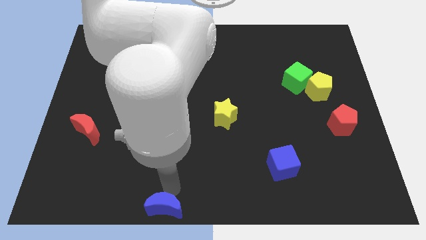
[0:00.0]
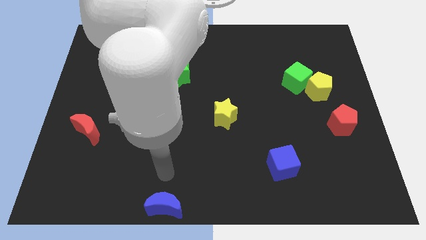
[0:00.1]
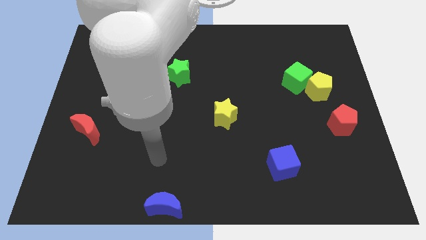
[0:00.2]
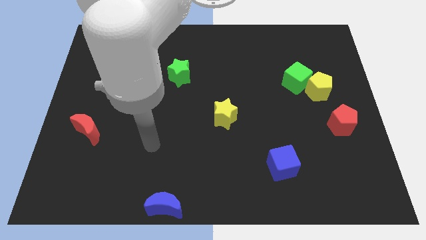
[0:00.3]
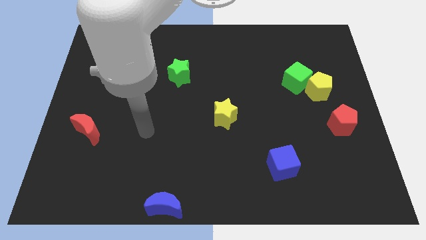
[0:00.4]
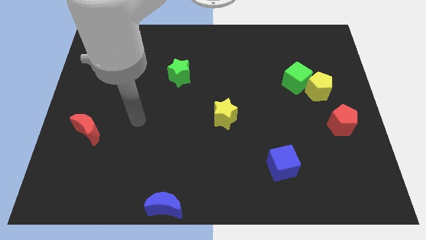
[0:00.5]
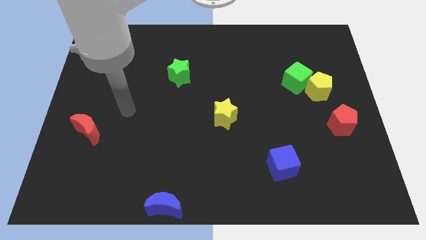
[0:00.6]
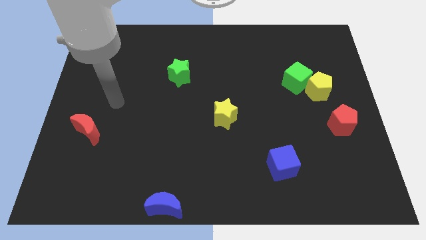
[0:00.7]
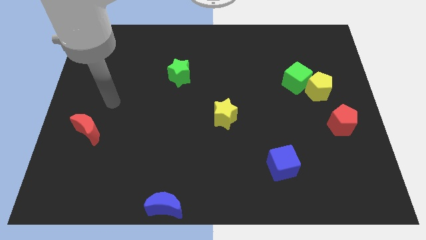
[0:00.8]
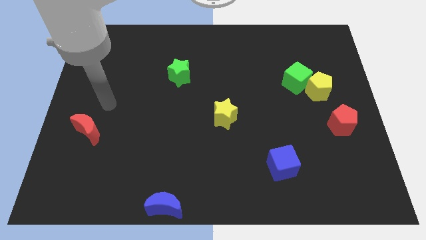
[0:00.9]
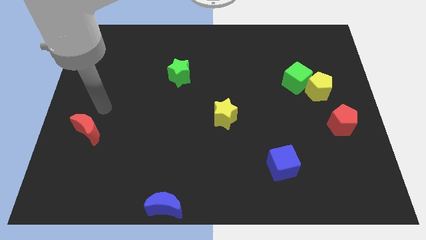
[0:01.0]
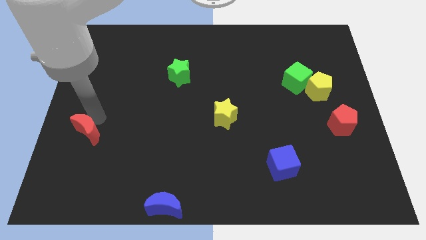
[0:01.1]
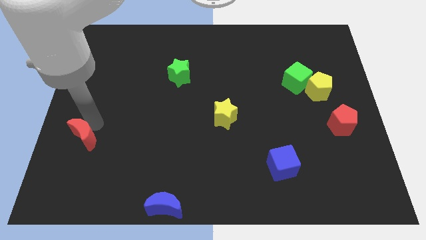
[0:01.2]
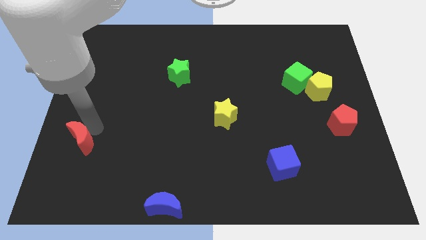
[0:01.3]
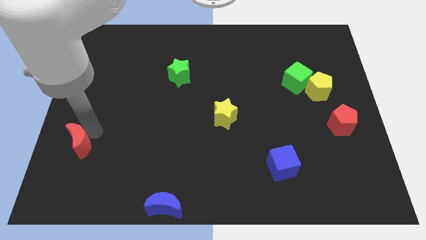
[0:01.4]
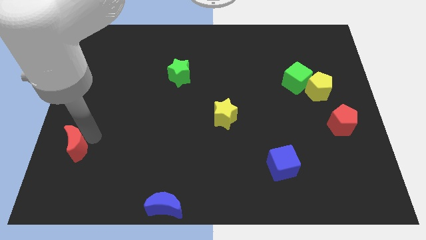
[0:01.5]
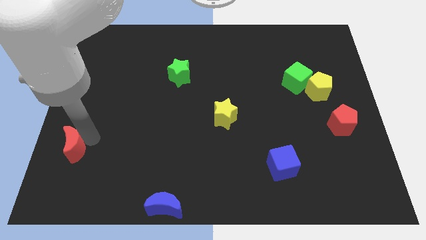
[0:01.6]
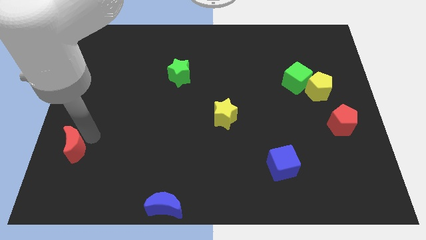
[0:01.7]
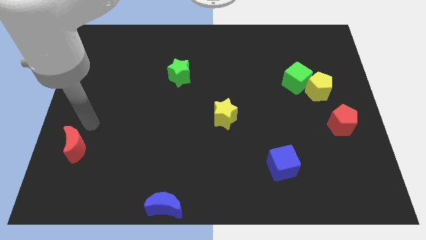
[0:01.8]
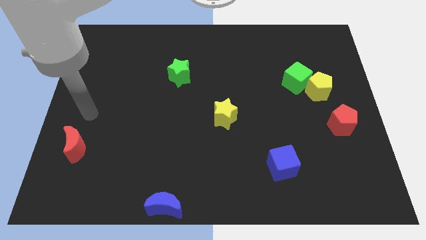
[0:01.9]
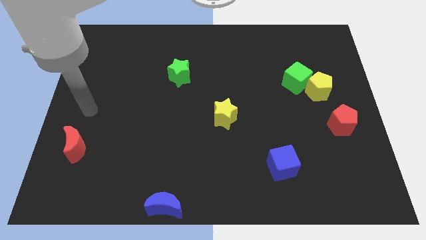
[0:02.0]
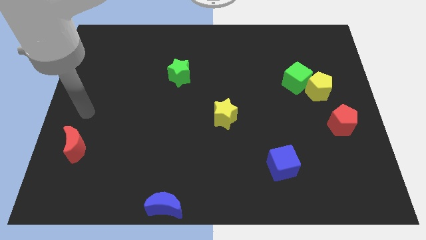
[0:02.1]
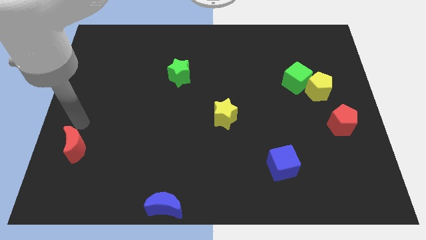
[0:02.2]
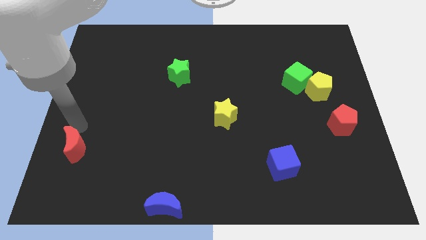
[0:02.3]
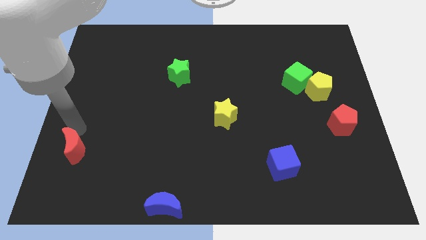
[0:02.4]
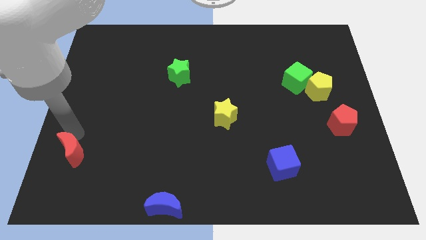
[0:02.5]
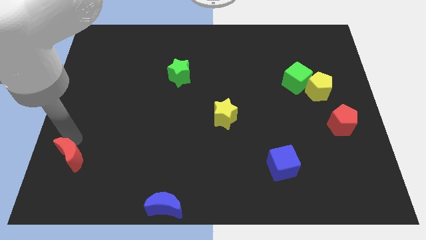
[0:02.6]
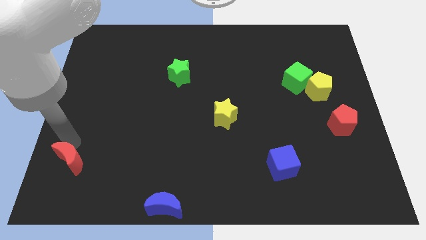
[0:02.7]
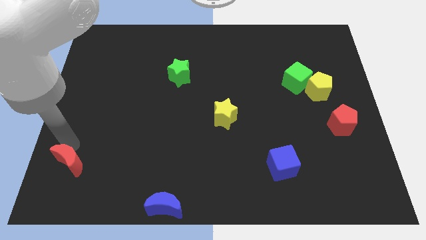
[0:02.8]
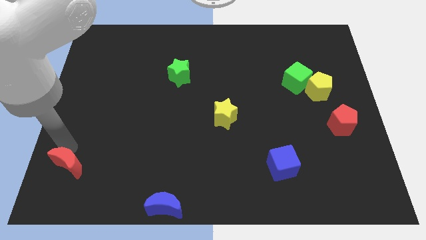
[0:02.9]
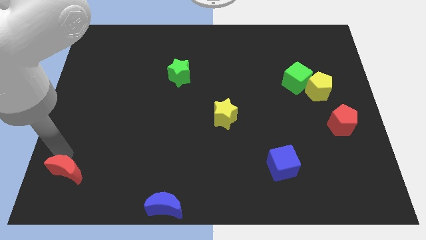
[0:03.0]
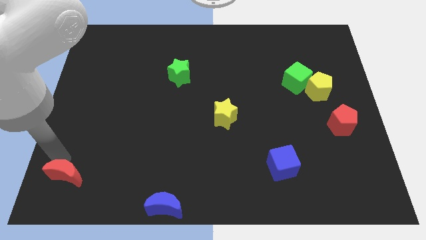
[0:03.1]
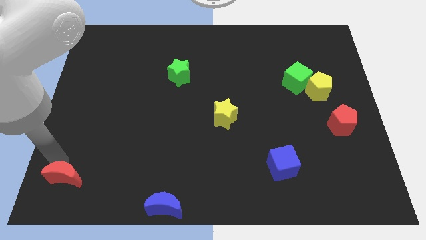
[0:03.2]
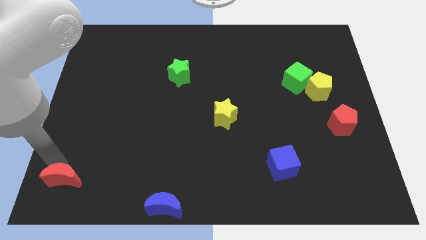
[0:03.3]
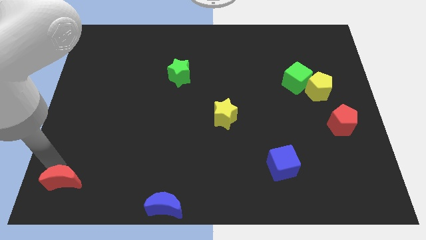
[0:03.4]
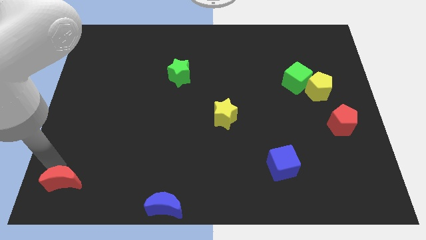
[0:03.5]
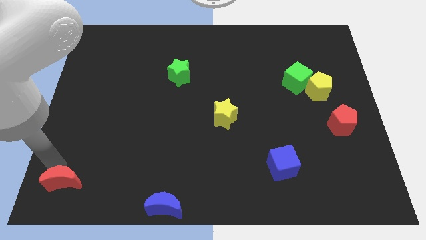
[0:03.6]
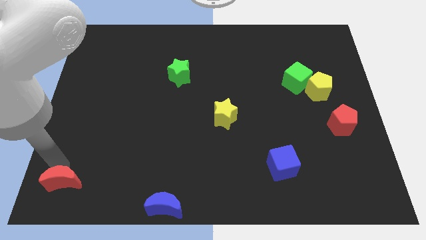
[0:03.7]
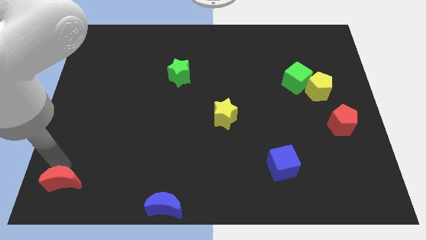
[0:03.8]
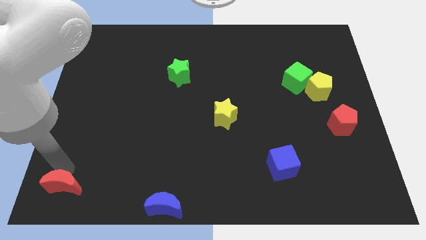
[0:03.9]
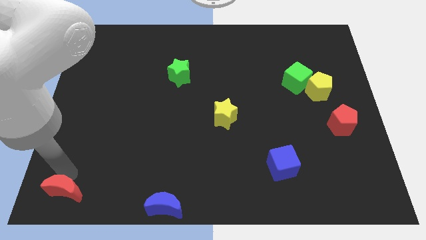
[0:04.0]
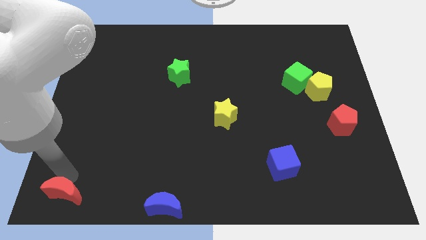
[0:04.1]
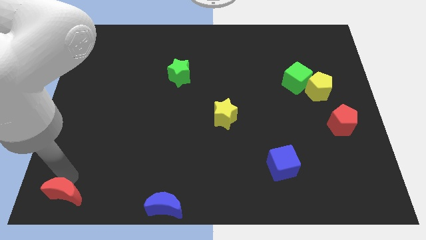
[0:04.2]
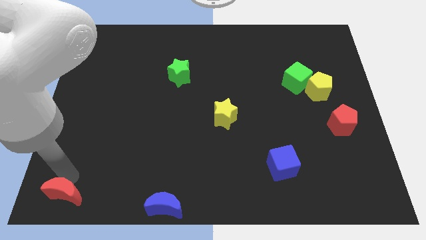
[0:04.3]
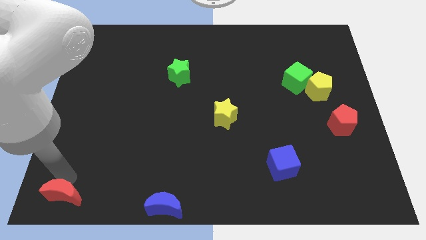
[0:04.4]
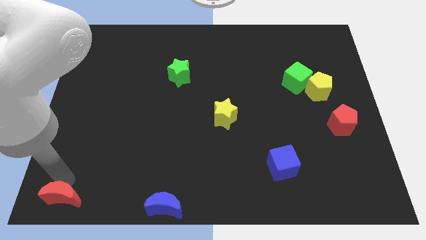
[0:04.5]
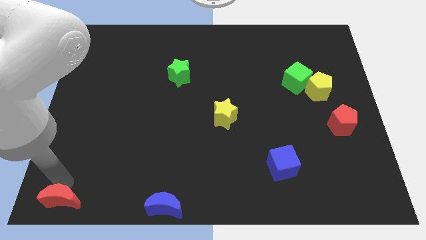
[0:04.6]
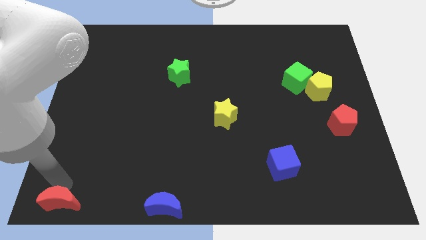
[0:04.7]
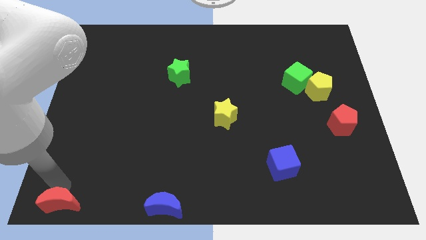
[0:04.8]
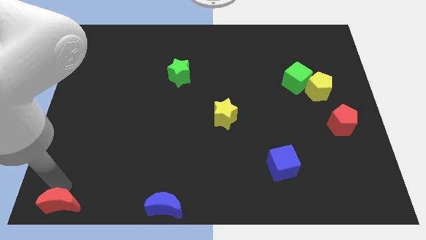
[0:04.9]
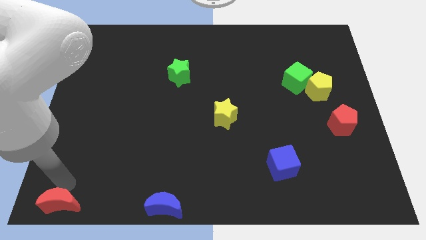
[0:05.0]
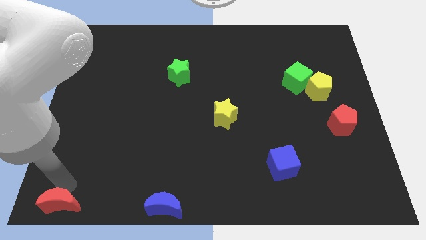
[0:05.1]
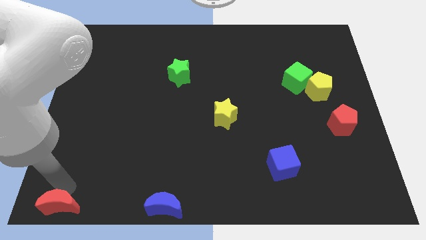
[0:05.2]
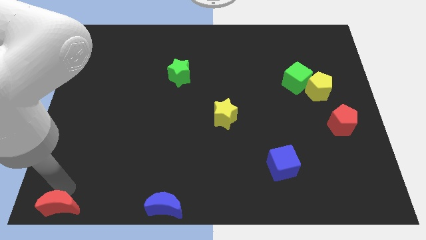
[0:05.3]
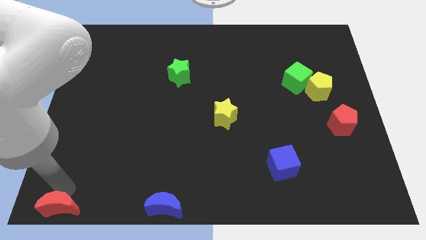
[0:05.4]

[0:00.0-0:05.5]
move the red crescent towards bottom left of the board

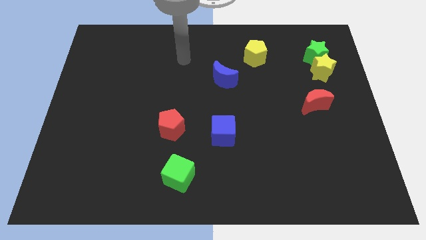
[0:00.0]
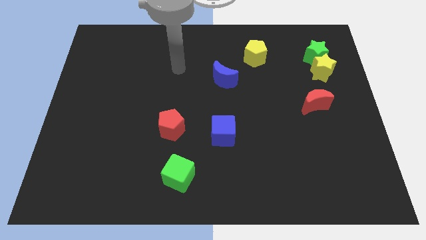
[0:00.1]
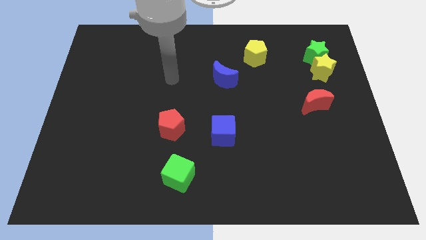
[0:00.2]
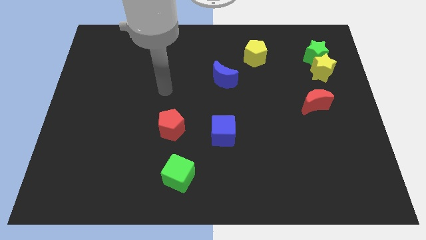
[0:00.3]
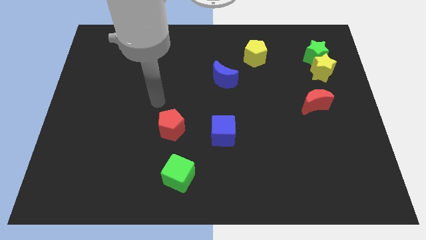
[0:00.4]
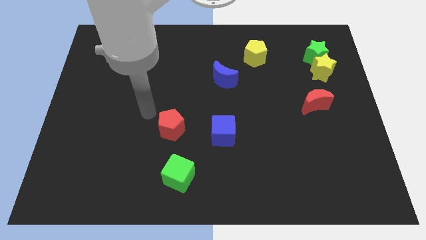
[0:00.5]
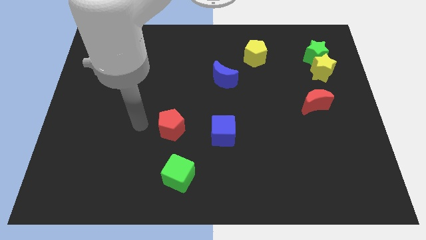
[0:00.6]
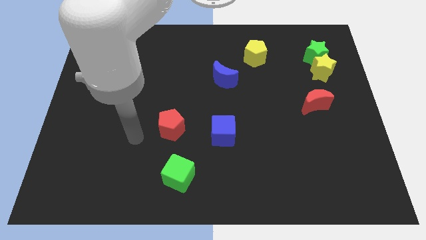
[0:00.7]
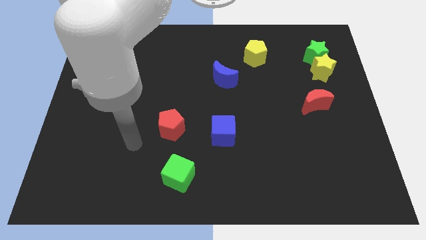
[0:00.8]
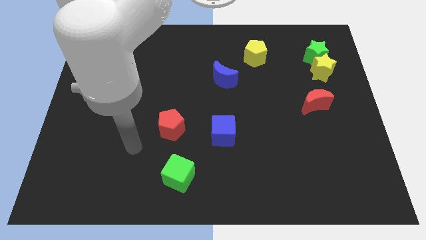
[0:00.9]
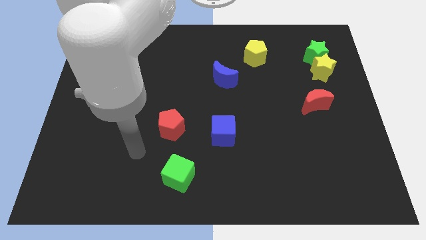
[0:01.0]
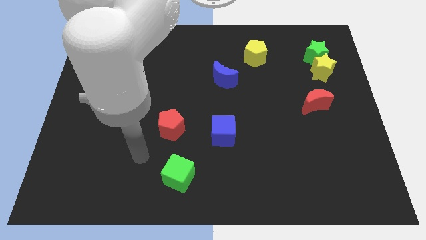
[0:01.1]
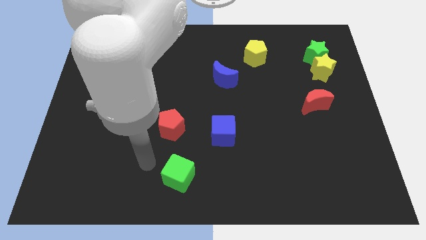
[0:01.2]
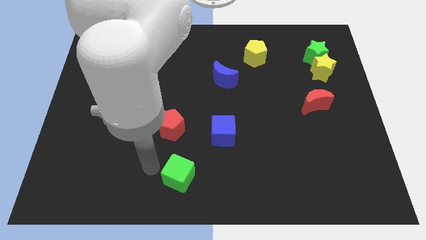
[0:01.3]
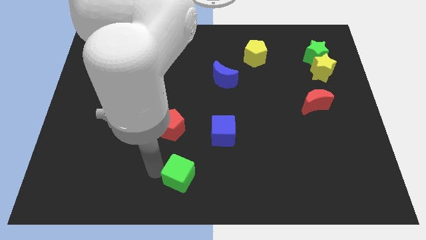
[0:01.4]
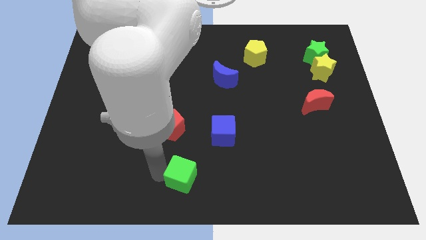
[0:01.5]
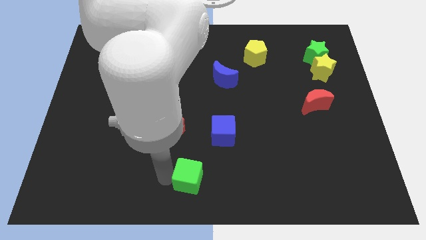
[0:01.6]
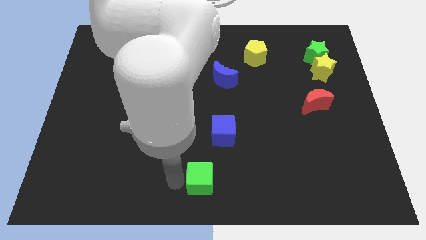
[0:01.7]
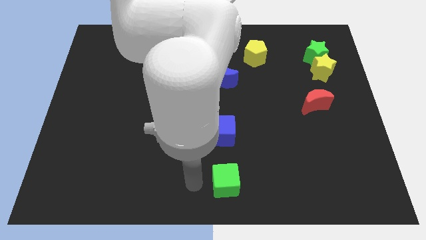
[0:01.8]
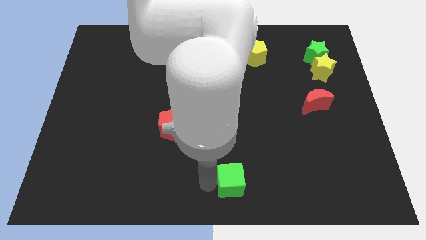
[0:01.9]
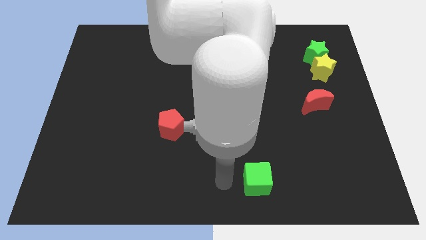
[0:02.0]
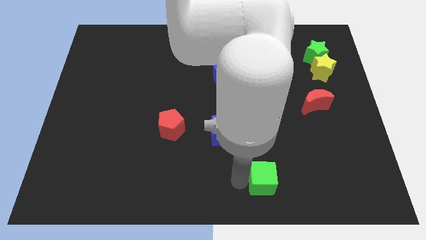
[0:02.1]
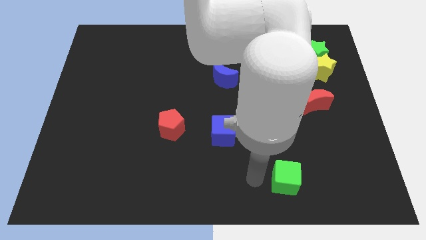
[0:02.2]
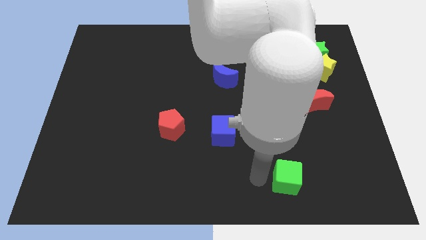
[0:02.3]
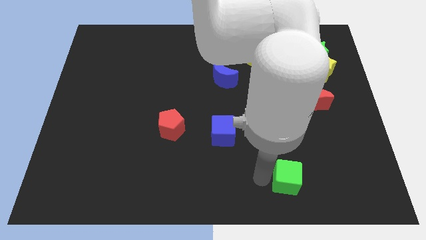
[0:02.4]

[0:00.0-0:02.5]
push the green cube towards bottom right corner

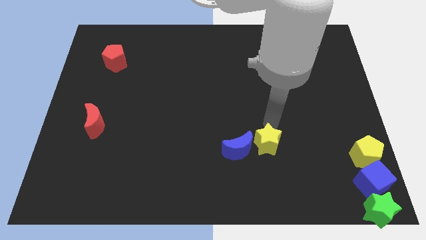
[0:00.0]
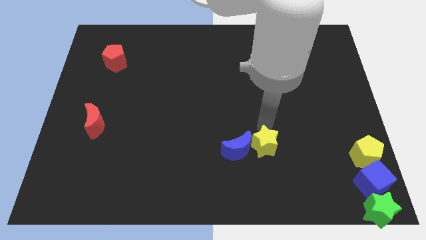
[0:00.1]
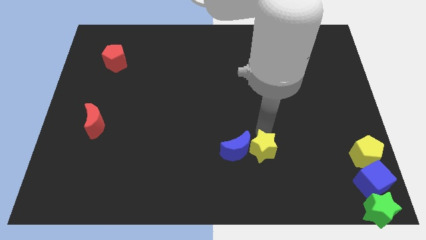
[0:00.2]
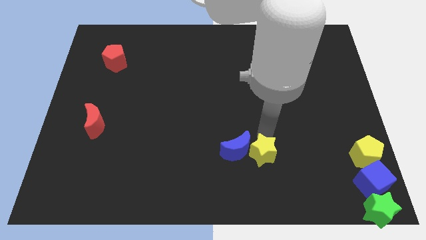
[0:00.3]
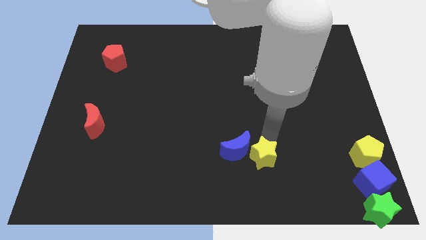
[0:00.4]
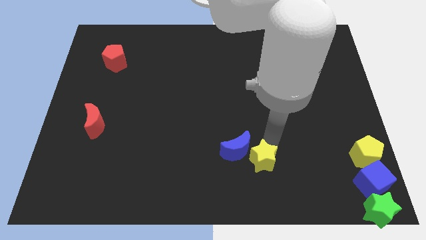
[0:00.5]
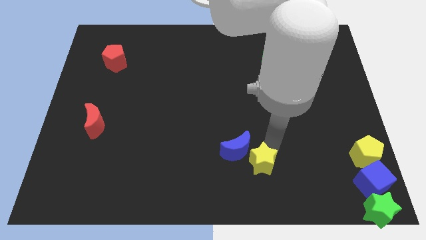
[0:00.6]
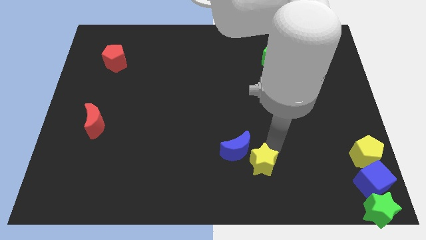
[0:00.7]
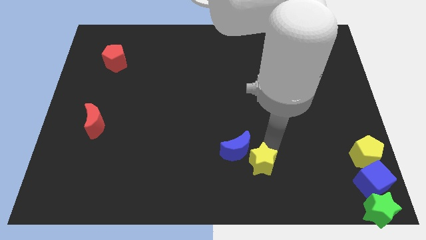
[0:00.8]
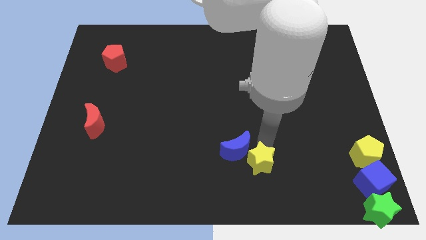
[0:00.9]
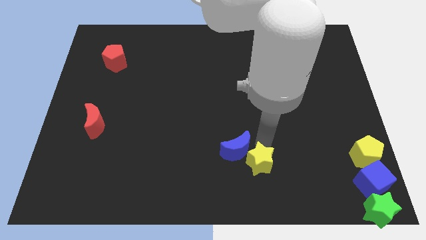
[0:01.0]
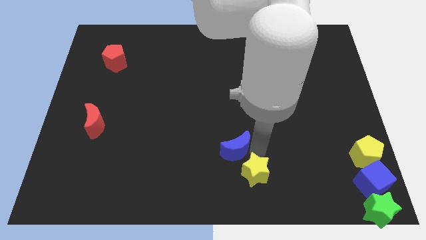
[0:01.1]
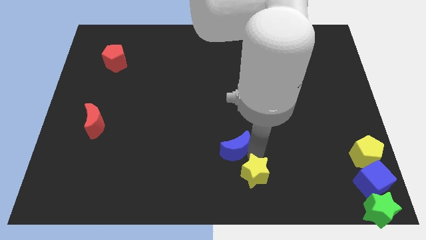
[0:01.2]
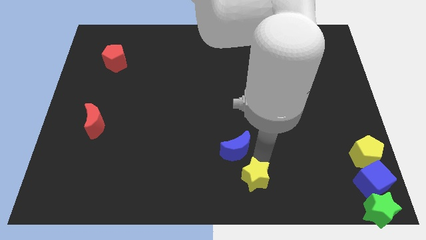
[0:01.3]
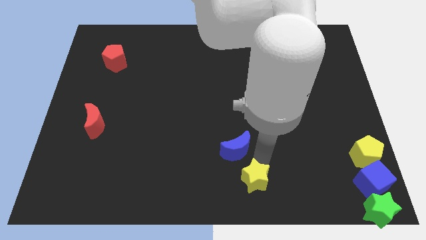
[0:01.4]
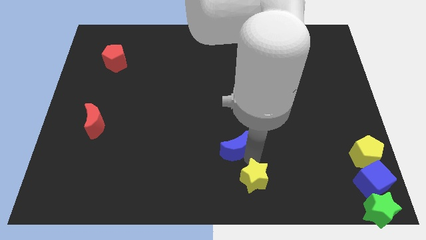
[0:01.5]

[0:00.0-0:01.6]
push the yellow star slightly to the bottom
